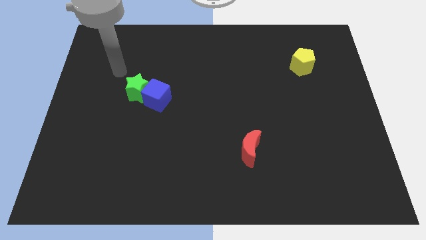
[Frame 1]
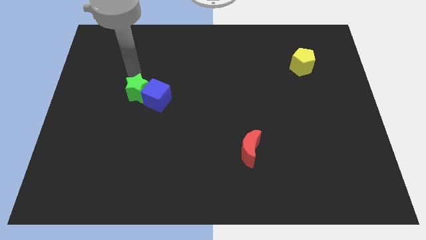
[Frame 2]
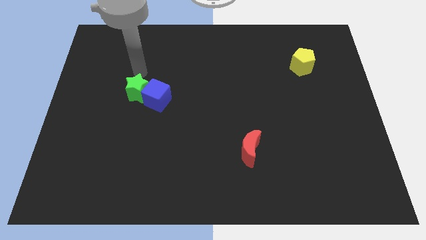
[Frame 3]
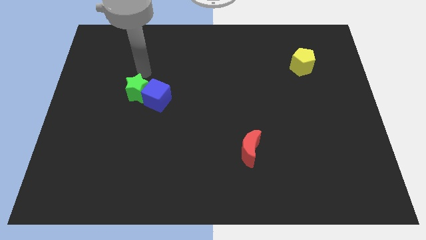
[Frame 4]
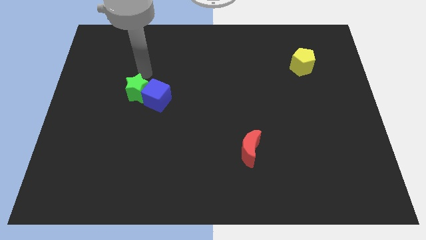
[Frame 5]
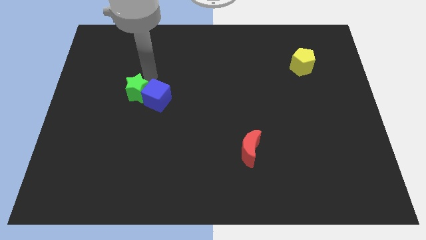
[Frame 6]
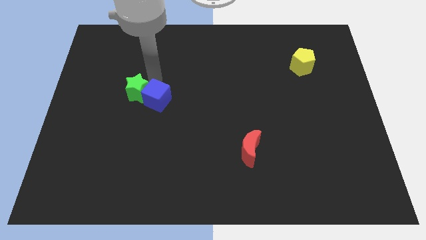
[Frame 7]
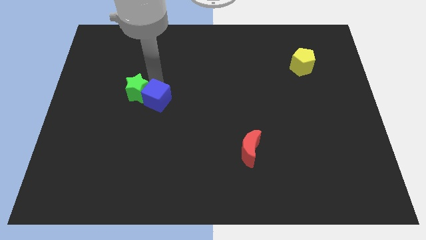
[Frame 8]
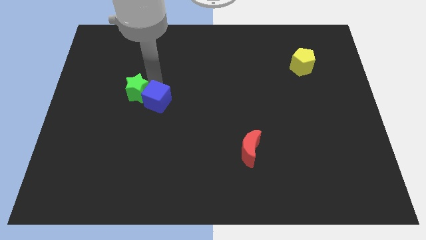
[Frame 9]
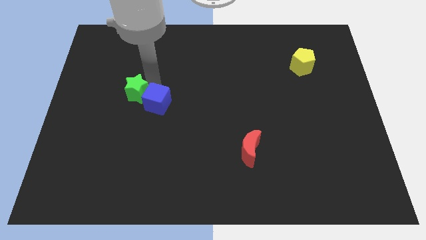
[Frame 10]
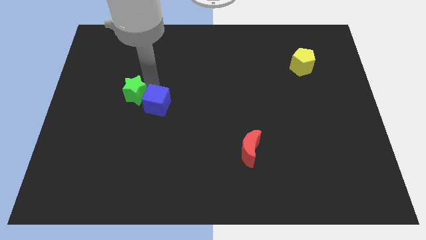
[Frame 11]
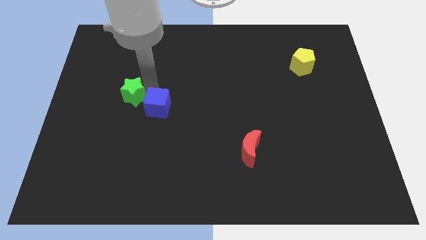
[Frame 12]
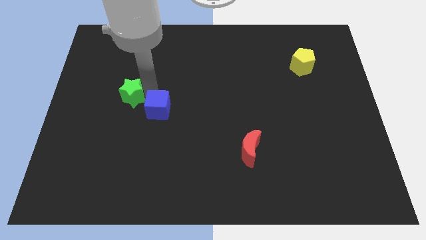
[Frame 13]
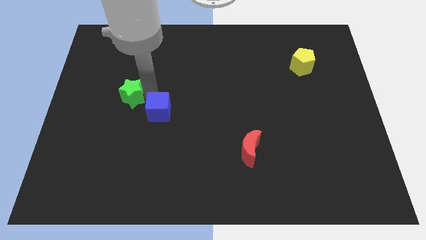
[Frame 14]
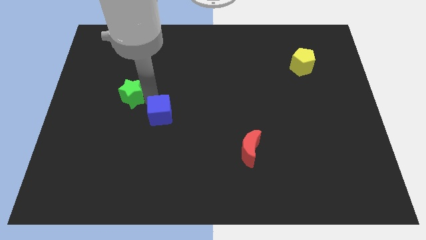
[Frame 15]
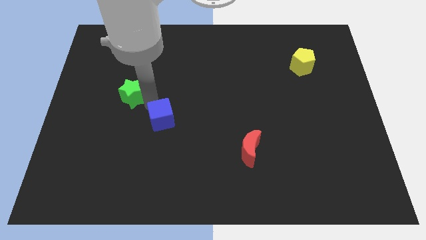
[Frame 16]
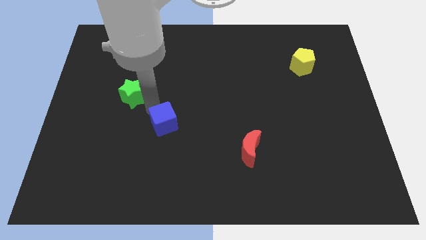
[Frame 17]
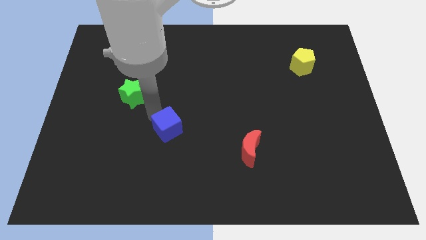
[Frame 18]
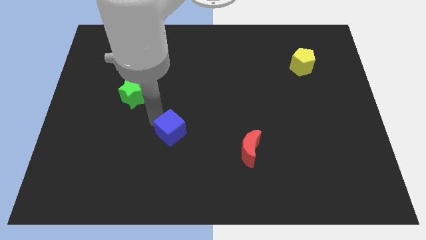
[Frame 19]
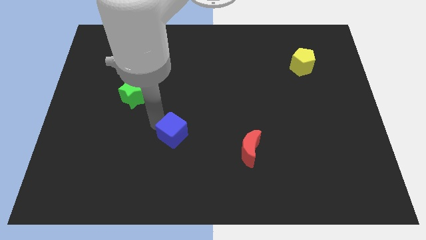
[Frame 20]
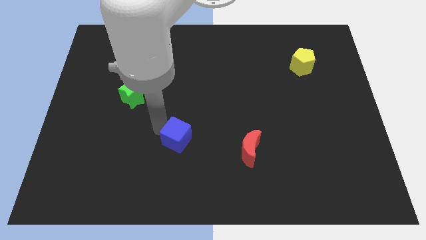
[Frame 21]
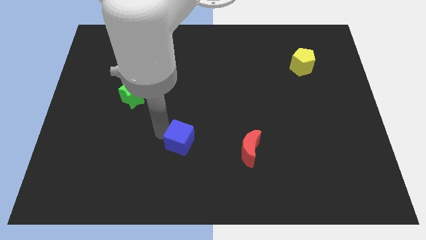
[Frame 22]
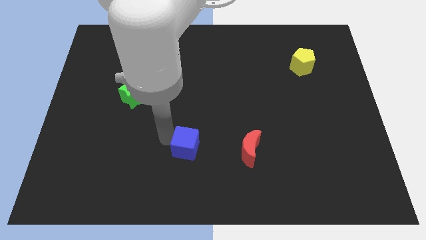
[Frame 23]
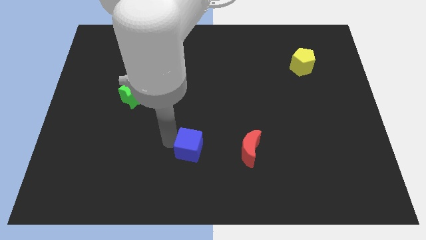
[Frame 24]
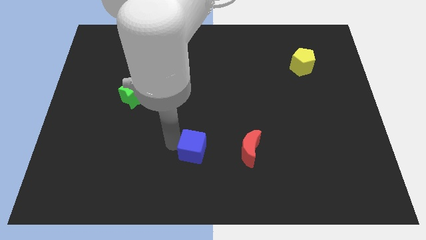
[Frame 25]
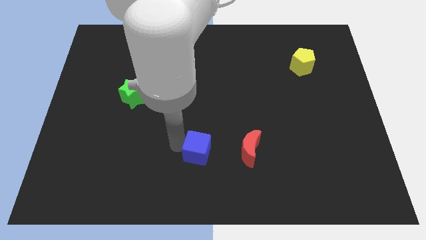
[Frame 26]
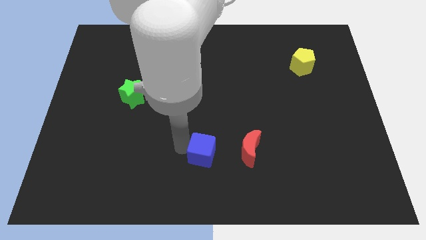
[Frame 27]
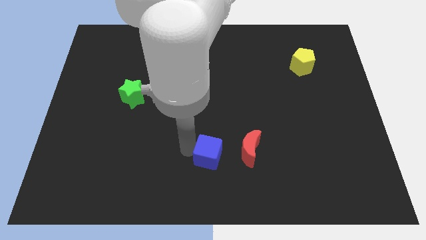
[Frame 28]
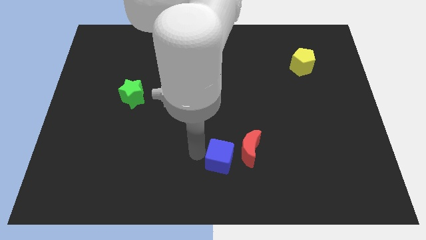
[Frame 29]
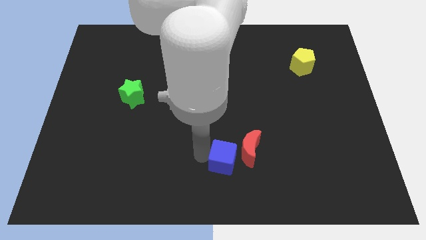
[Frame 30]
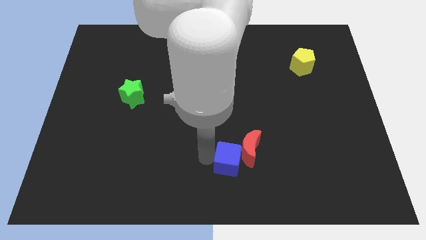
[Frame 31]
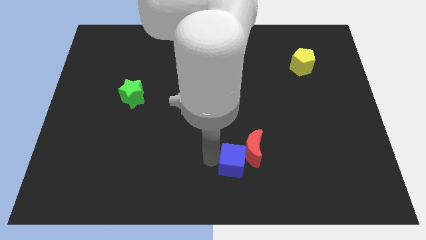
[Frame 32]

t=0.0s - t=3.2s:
push the cube to the red block

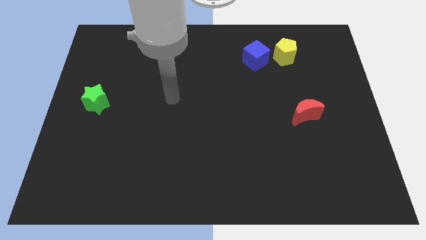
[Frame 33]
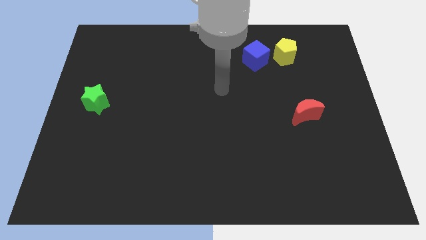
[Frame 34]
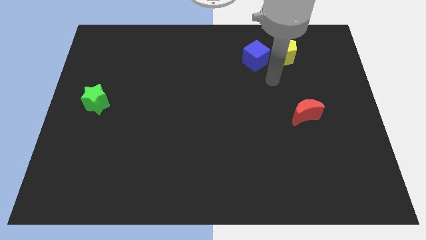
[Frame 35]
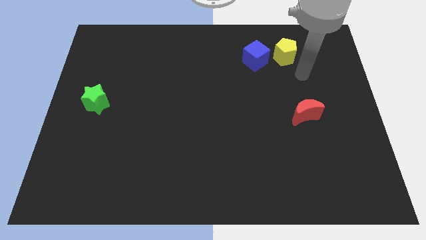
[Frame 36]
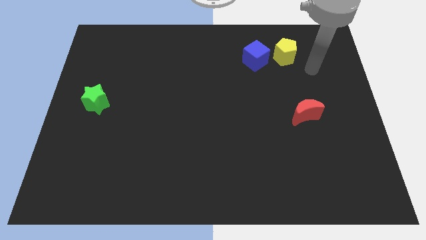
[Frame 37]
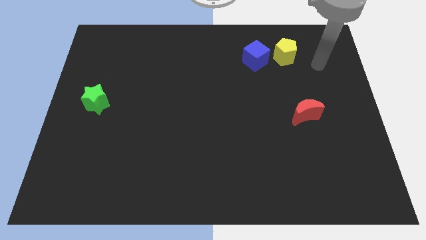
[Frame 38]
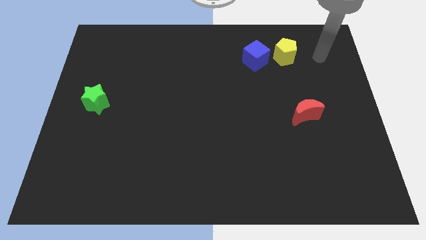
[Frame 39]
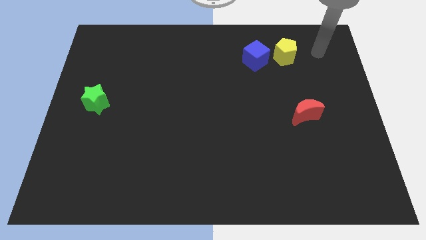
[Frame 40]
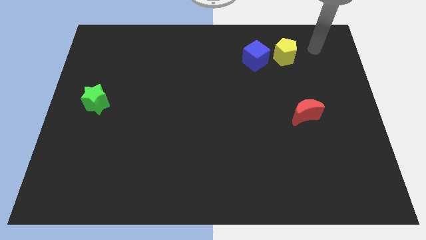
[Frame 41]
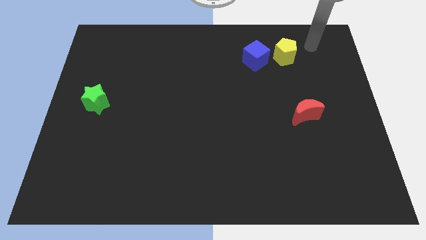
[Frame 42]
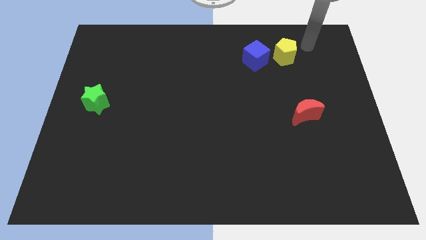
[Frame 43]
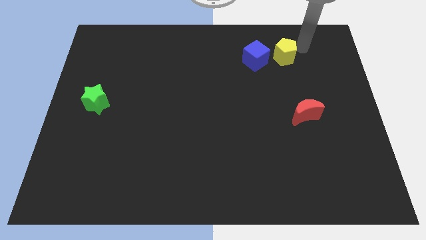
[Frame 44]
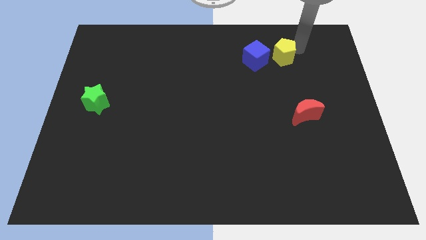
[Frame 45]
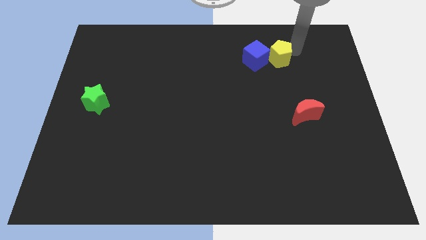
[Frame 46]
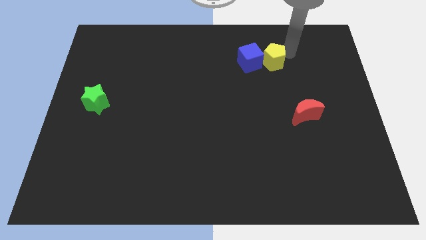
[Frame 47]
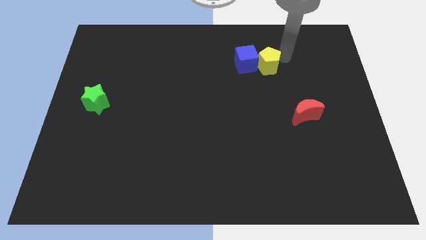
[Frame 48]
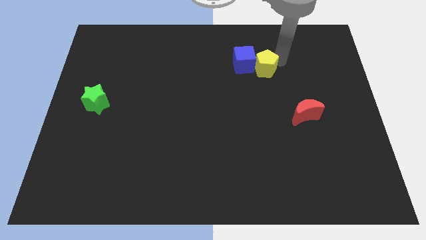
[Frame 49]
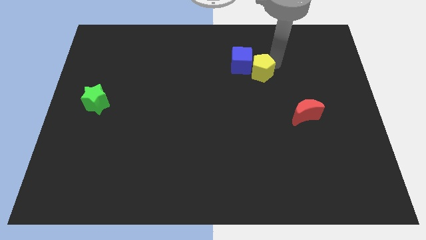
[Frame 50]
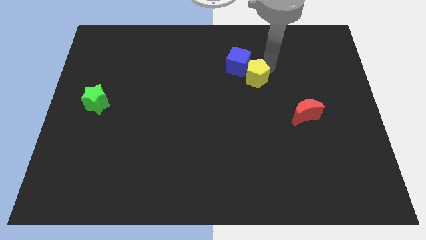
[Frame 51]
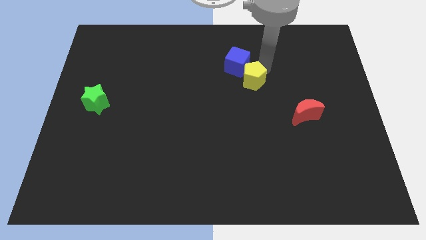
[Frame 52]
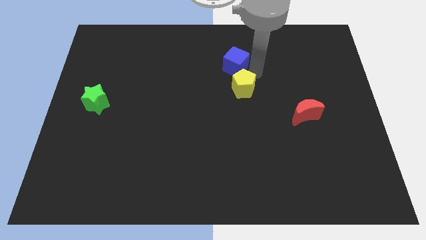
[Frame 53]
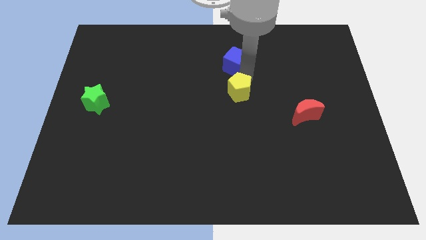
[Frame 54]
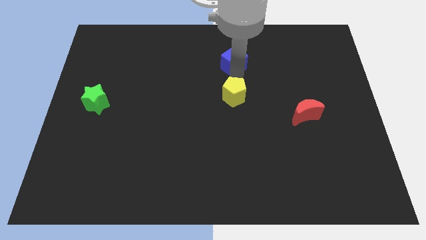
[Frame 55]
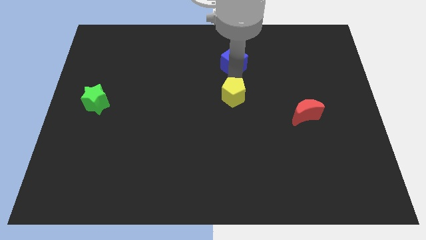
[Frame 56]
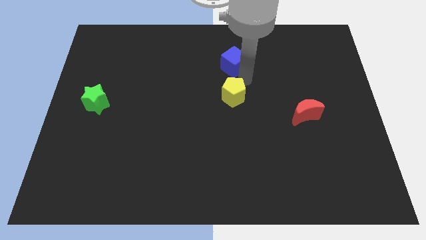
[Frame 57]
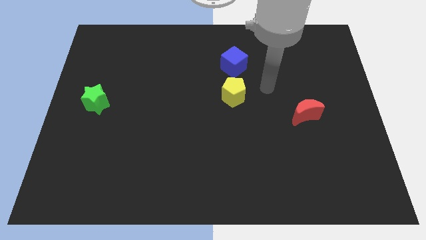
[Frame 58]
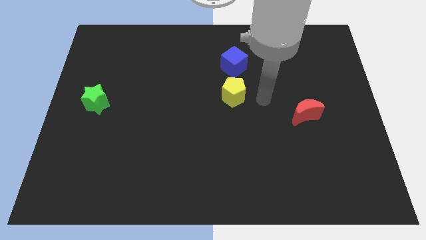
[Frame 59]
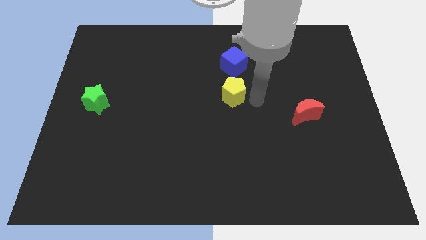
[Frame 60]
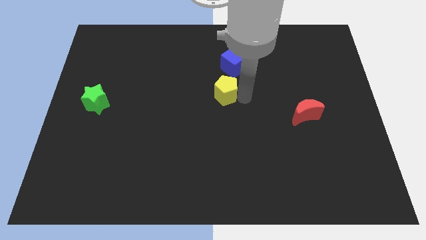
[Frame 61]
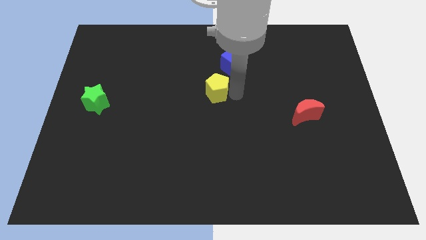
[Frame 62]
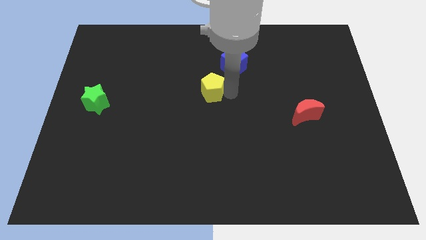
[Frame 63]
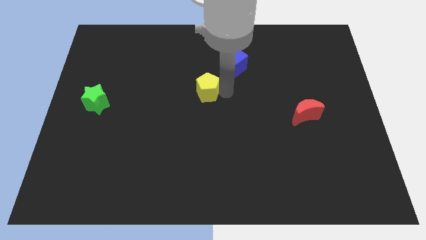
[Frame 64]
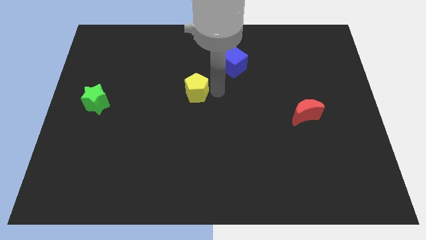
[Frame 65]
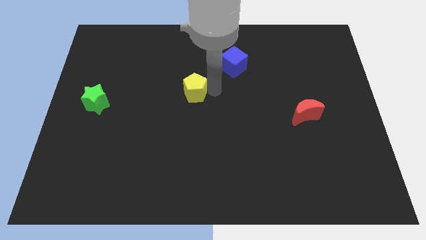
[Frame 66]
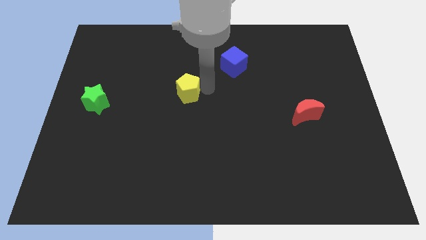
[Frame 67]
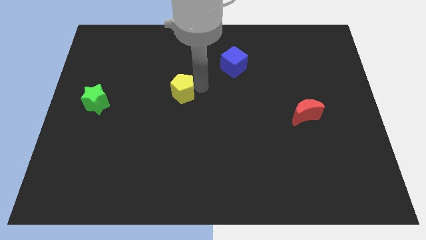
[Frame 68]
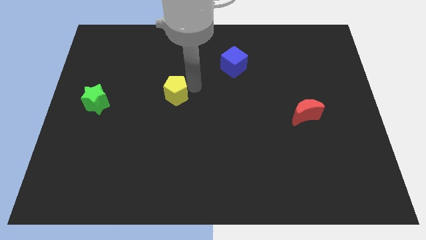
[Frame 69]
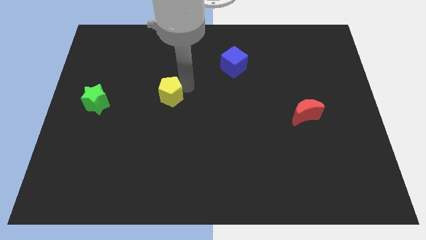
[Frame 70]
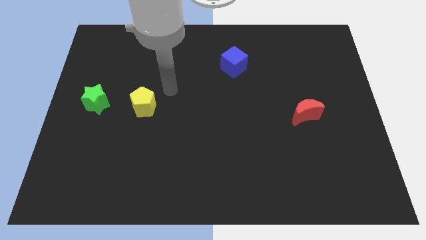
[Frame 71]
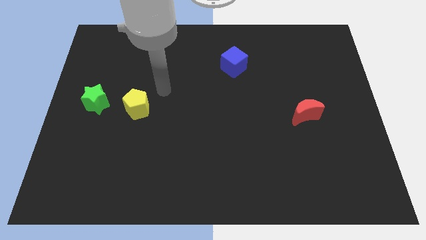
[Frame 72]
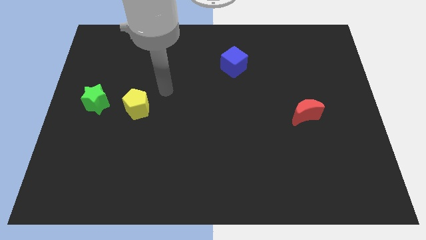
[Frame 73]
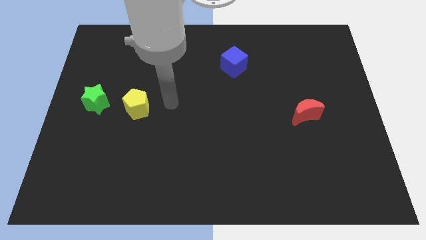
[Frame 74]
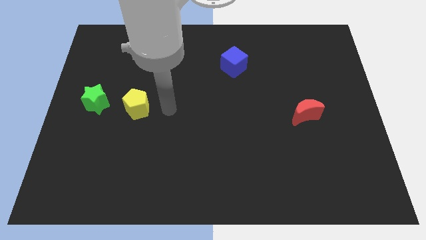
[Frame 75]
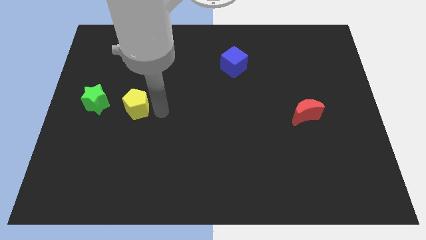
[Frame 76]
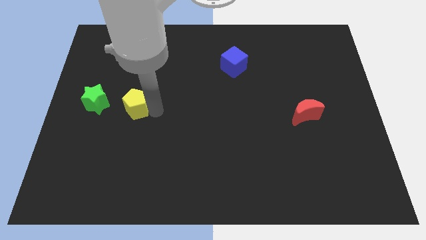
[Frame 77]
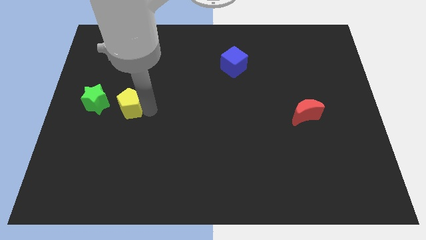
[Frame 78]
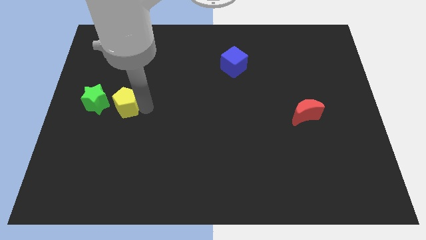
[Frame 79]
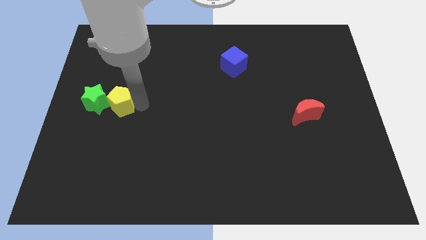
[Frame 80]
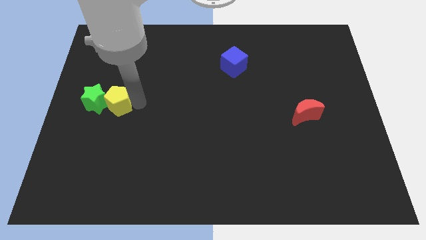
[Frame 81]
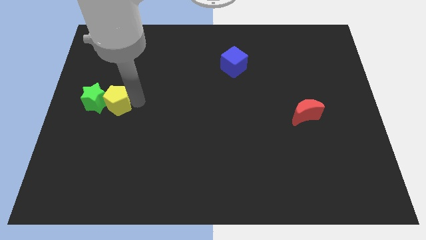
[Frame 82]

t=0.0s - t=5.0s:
push the pentagon to the green star
